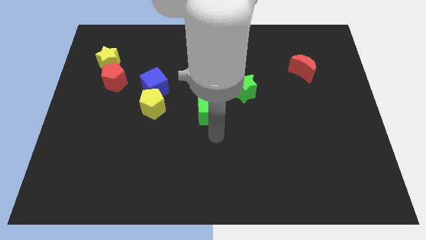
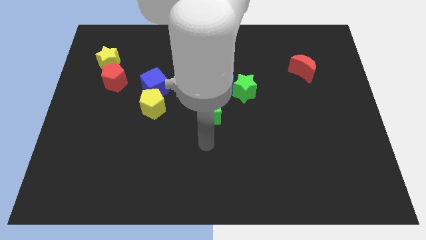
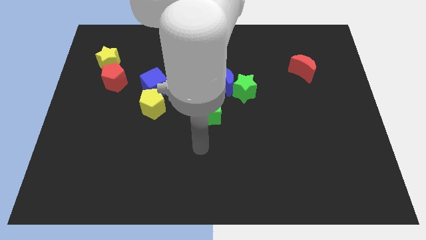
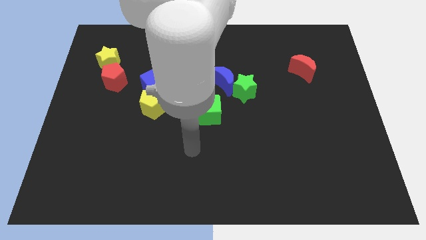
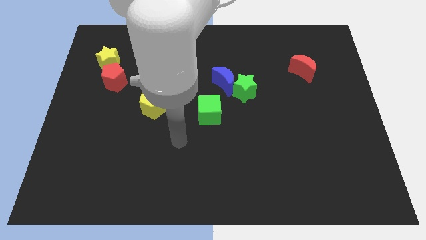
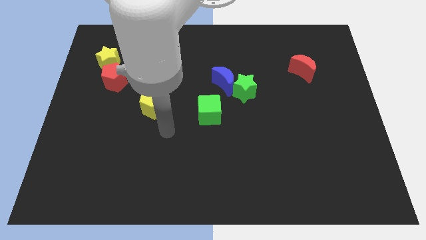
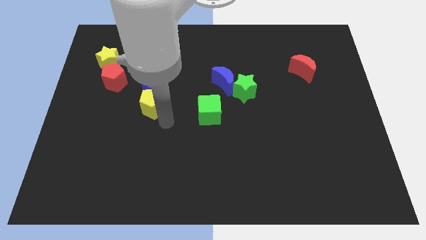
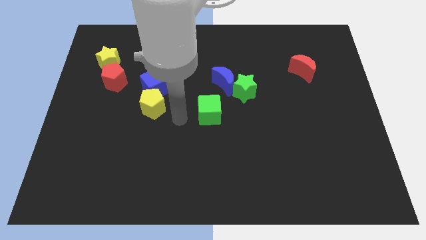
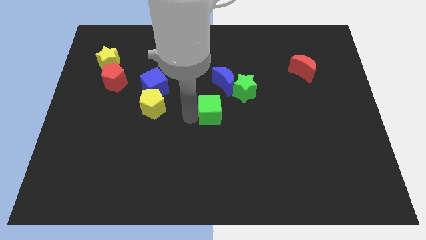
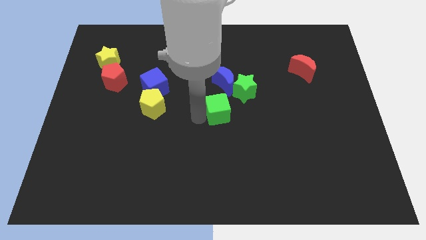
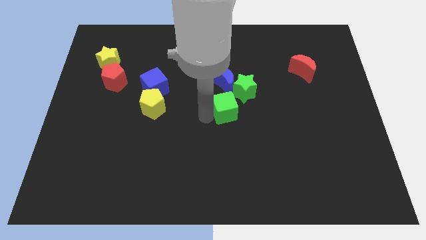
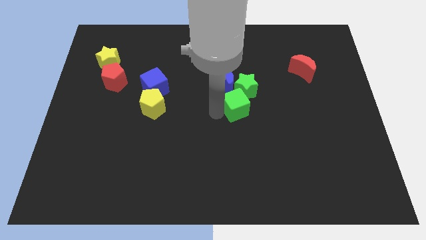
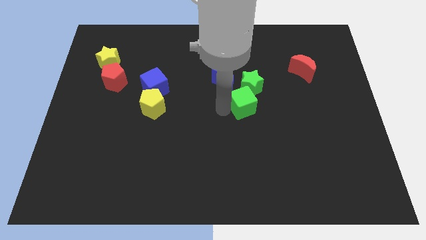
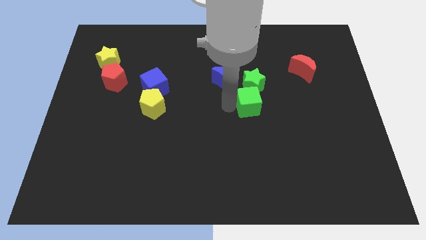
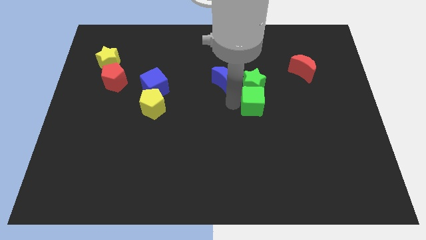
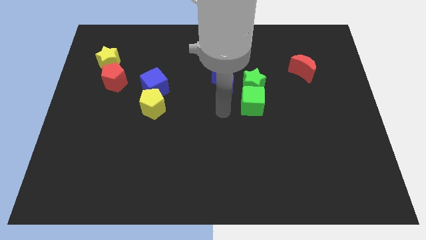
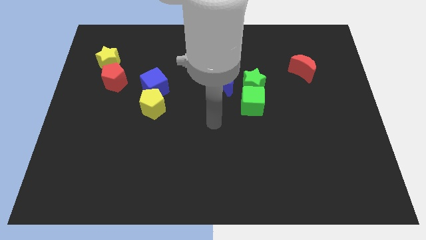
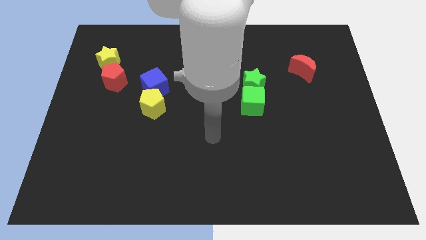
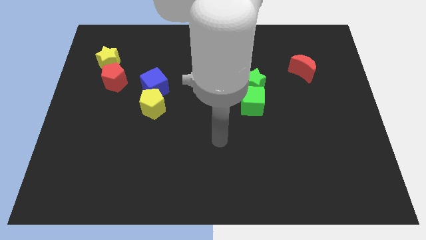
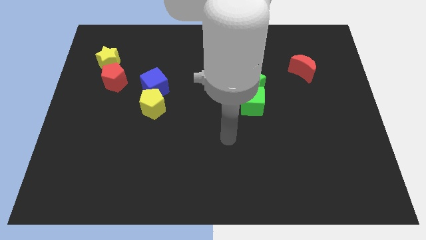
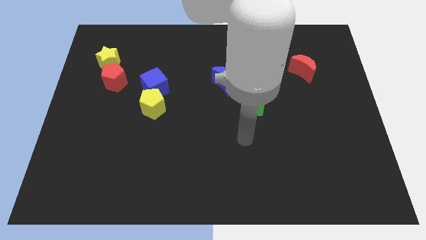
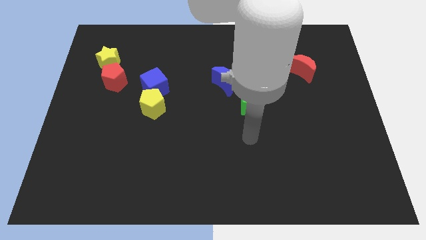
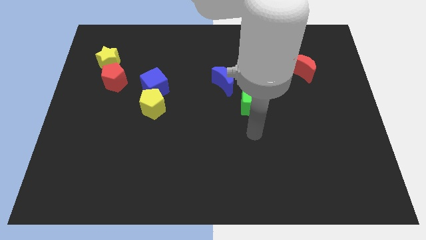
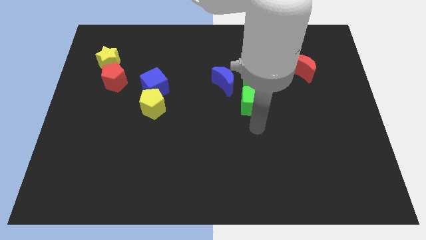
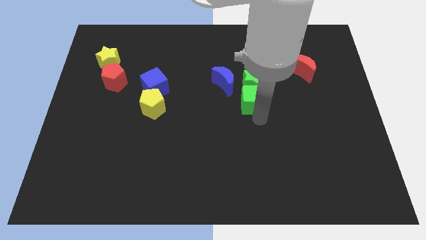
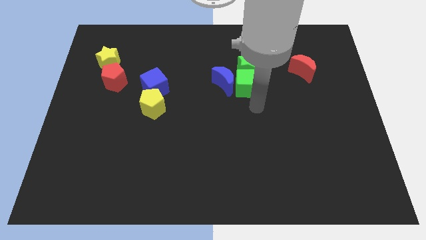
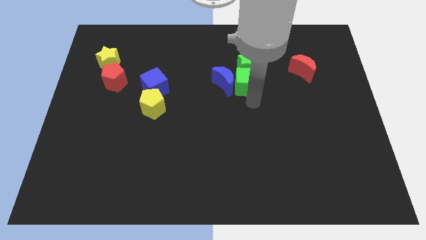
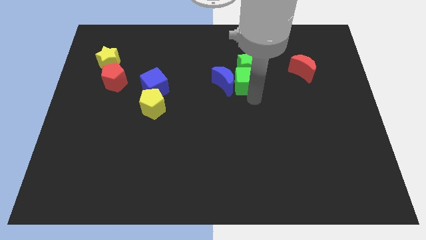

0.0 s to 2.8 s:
put the green blocks right to the blue moon

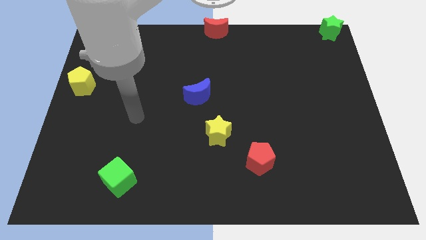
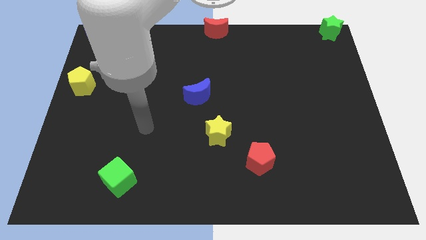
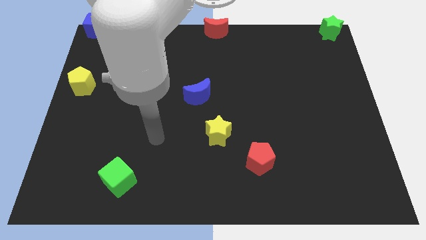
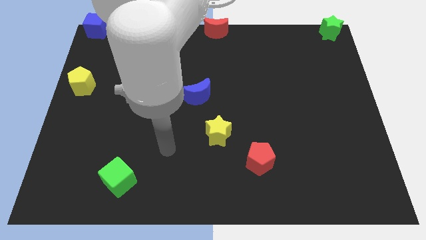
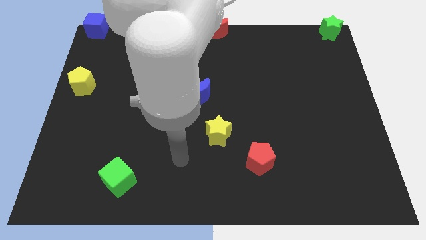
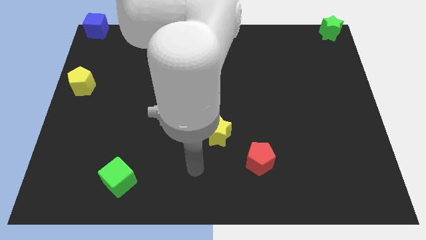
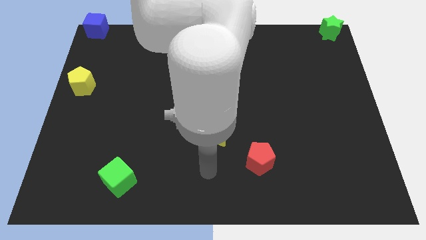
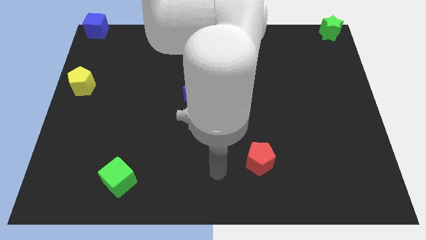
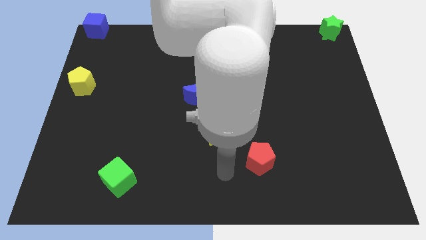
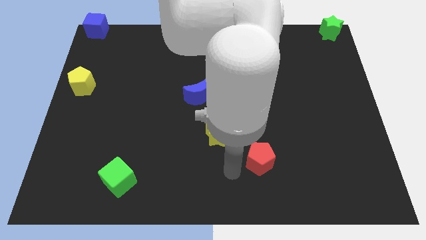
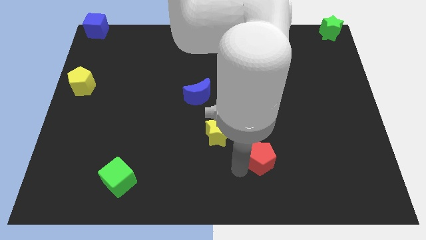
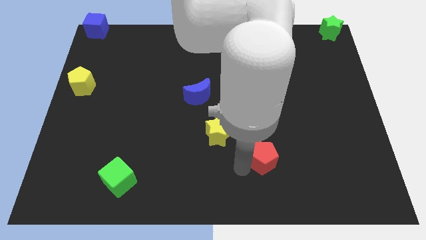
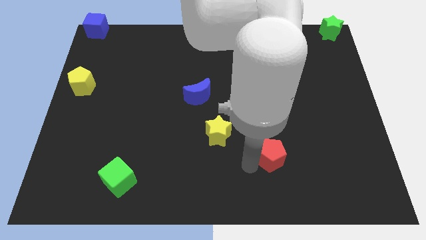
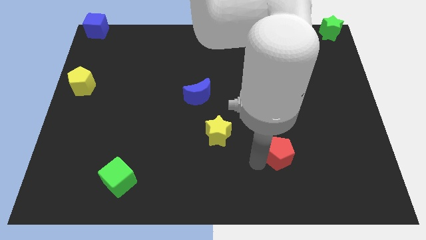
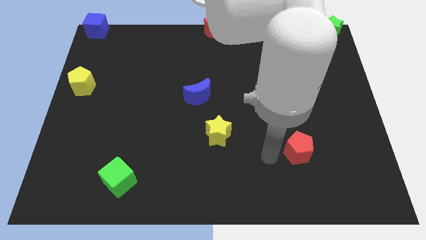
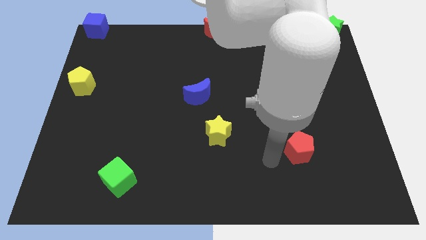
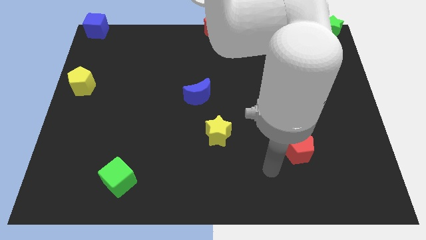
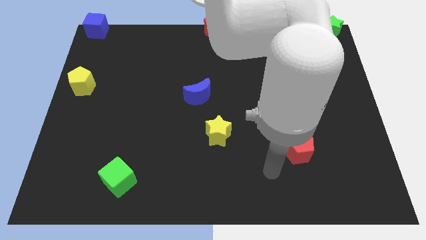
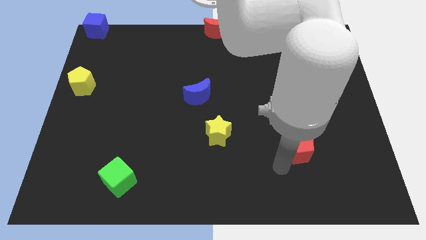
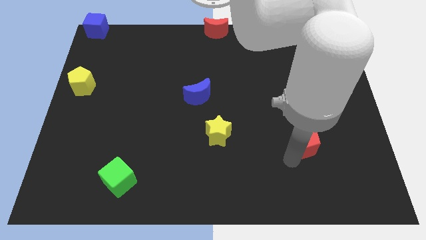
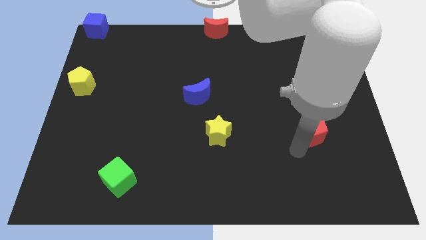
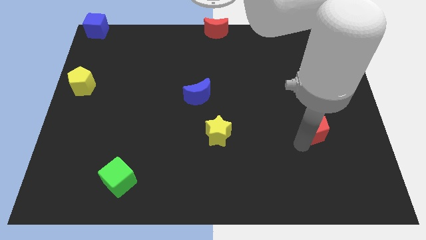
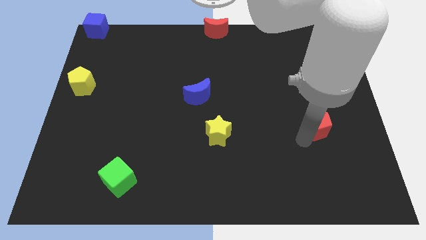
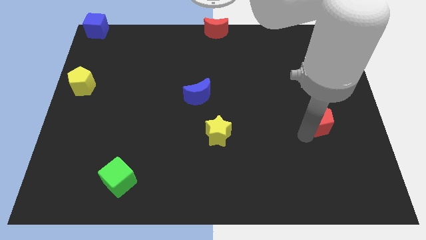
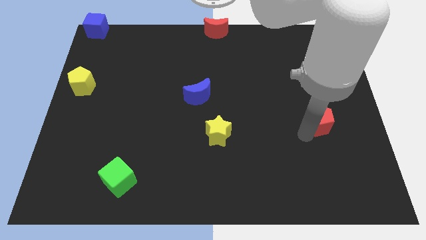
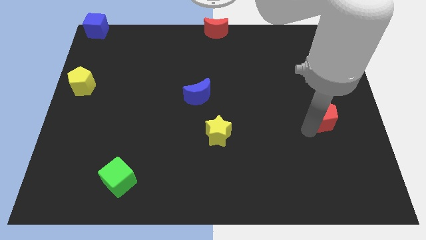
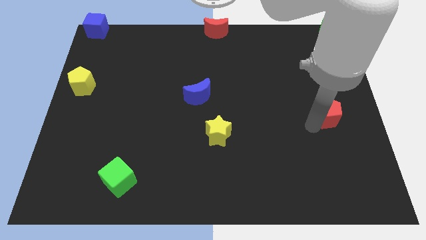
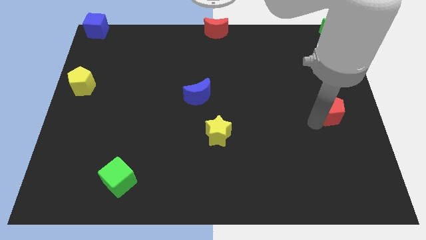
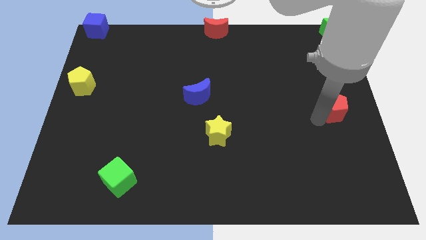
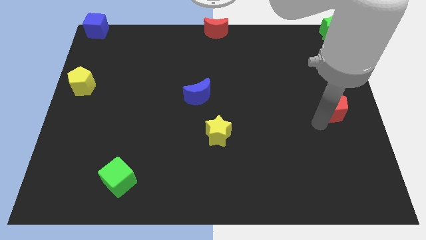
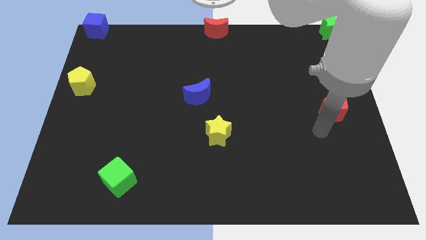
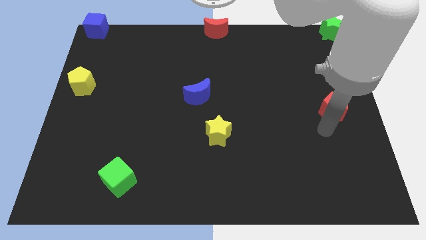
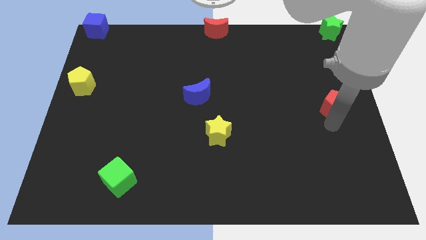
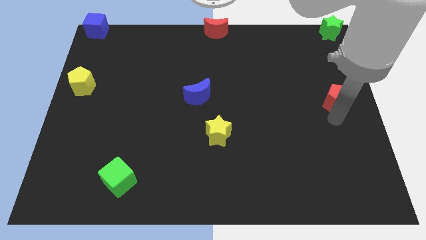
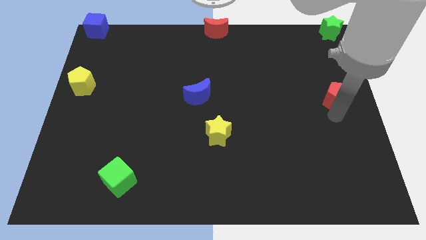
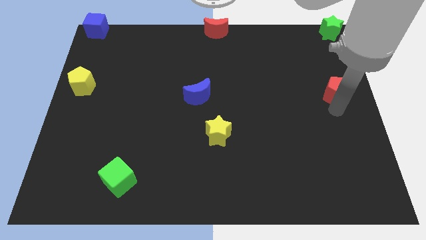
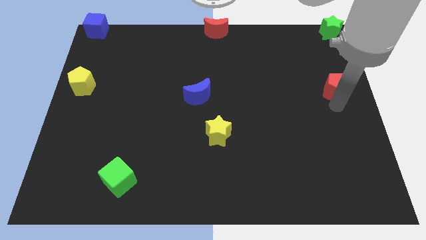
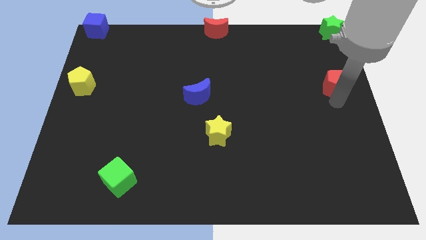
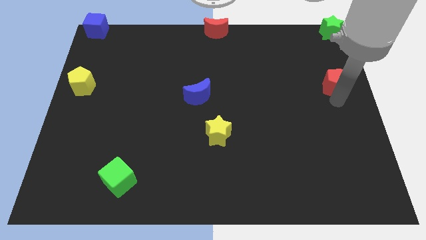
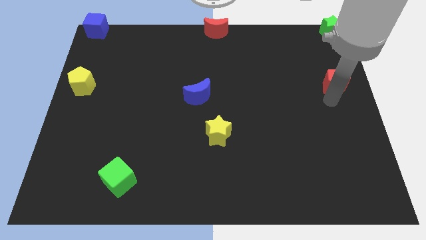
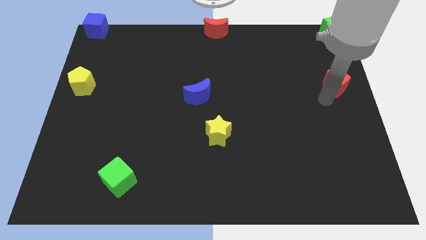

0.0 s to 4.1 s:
slide the red pentagon towards the green star

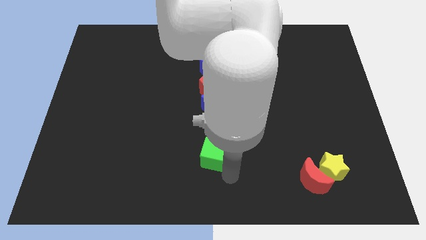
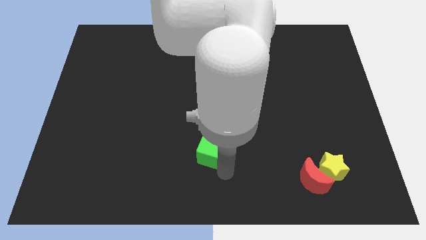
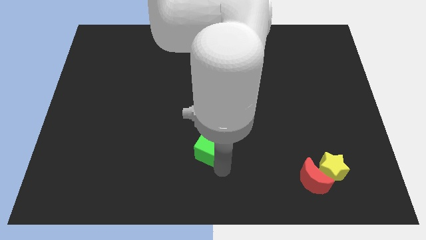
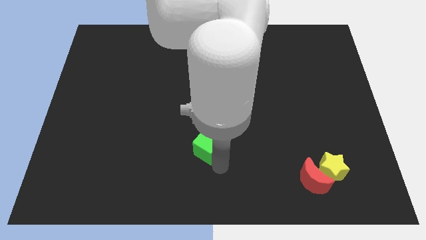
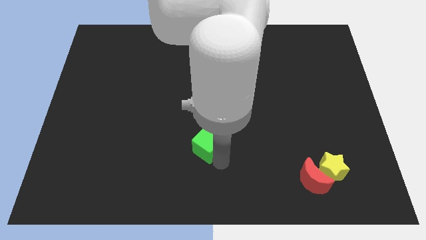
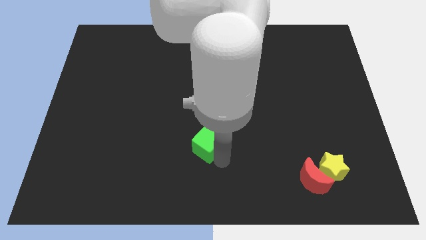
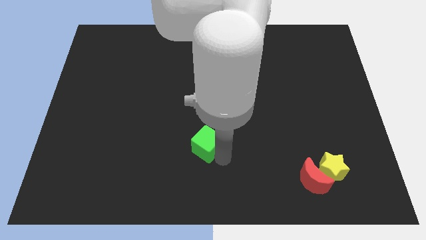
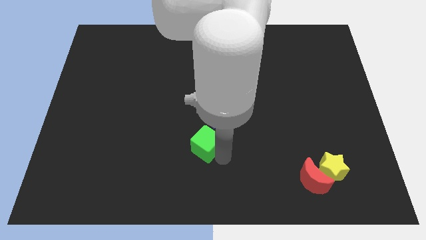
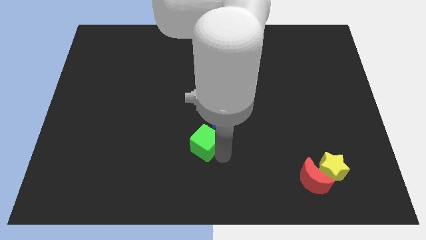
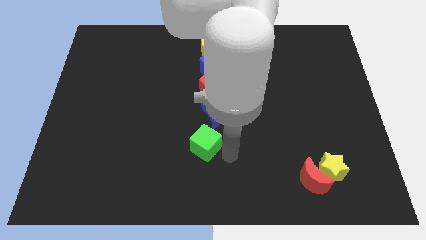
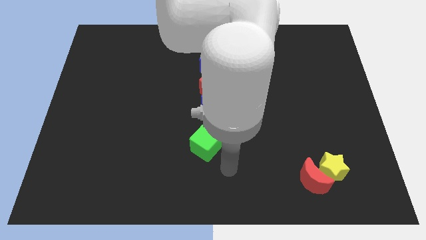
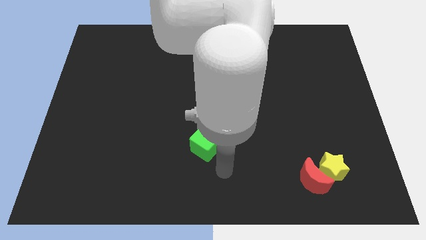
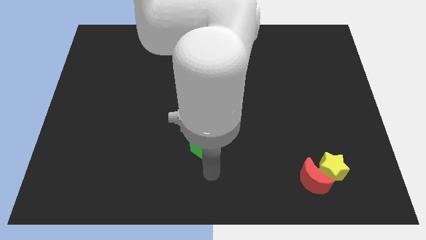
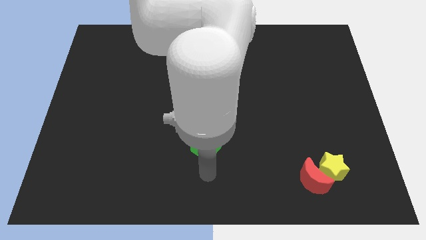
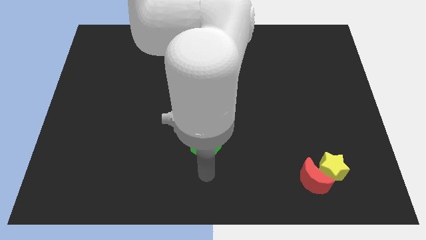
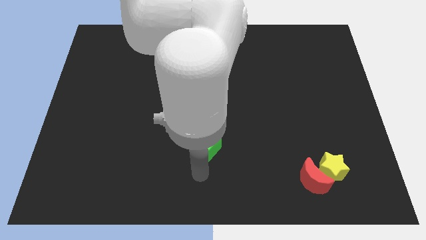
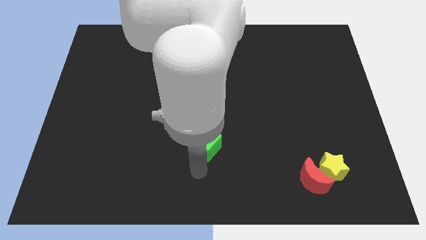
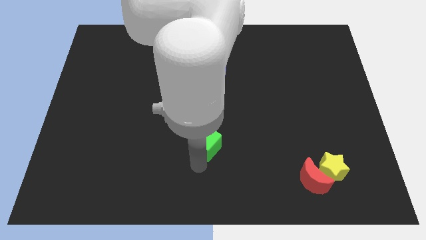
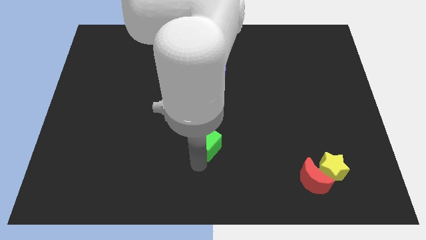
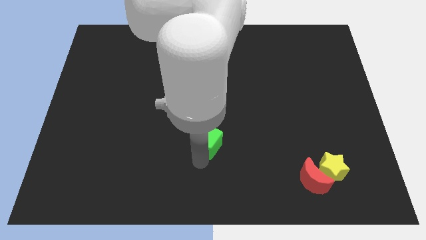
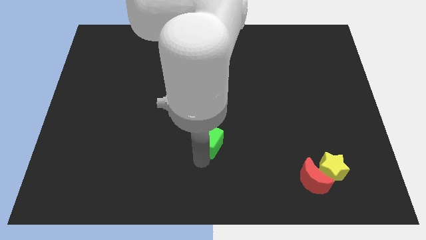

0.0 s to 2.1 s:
slightly move the green cube towards blue crescent
